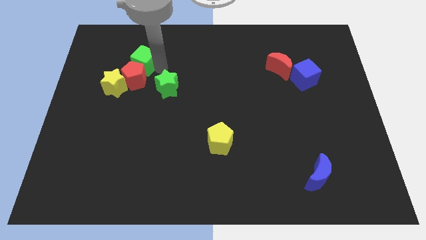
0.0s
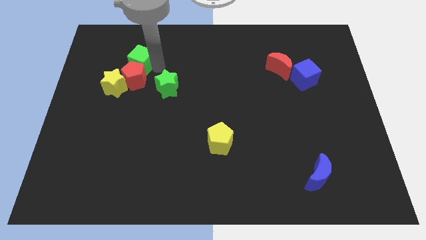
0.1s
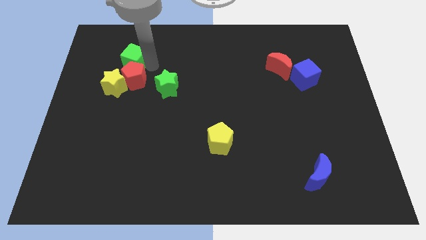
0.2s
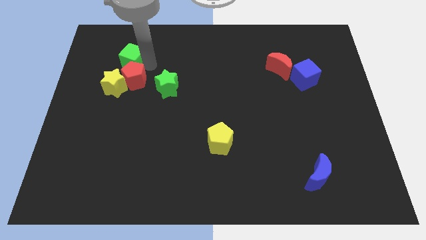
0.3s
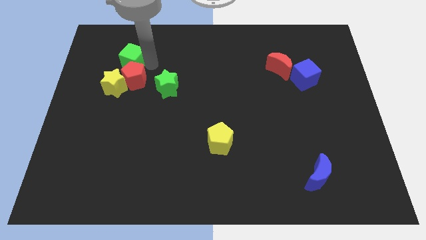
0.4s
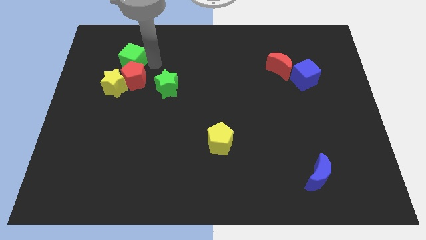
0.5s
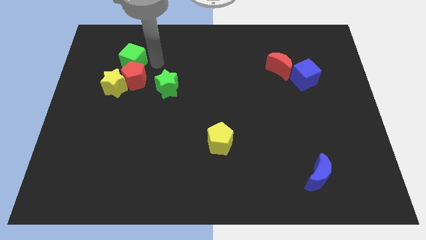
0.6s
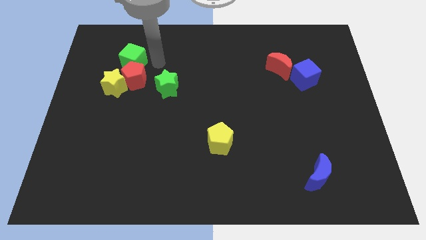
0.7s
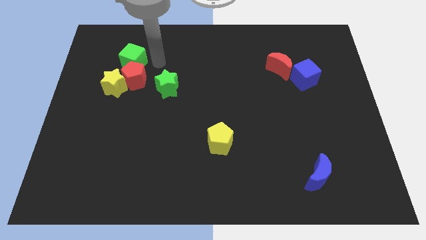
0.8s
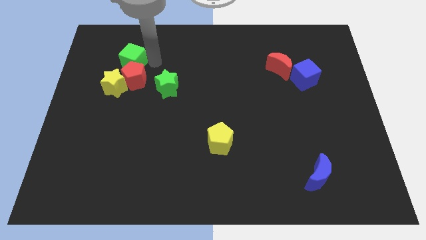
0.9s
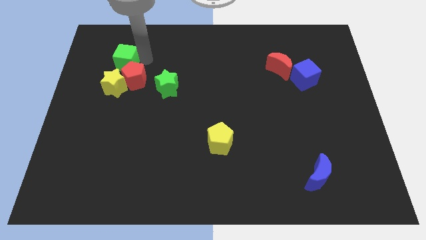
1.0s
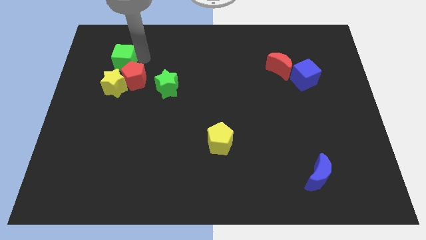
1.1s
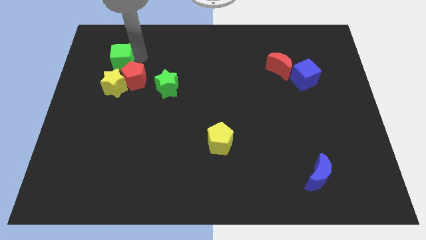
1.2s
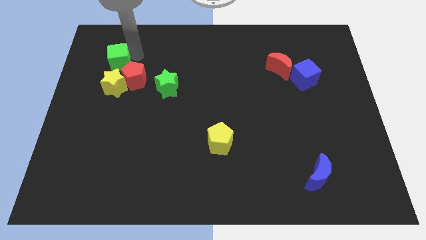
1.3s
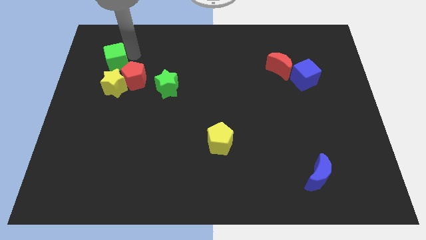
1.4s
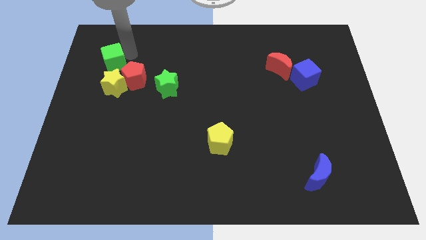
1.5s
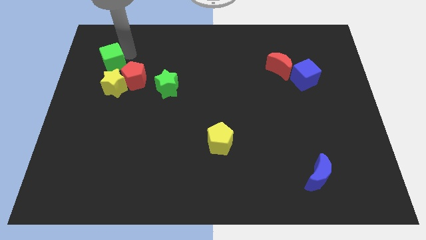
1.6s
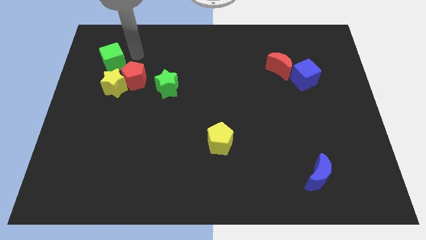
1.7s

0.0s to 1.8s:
move green cube slightly towards left

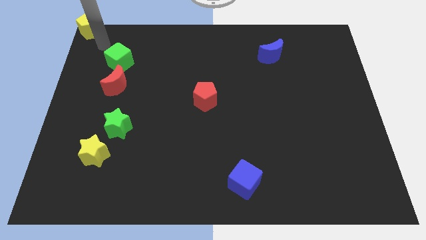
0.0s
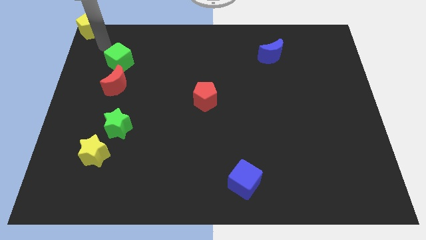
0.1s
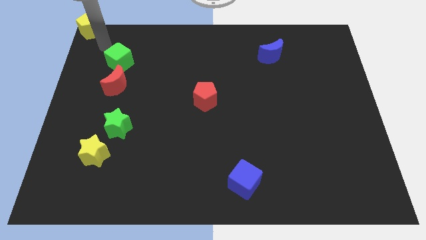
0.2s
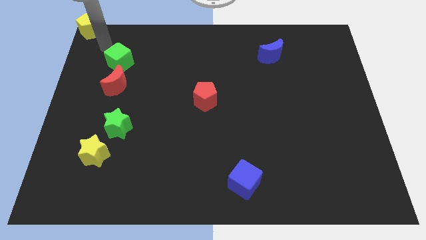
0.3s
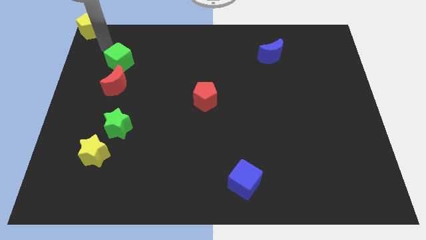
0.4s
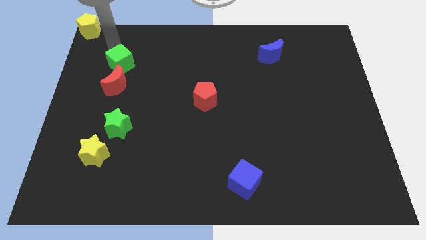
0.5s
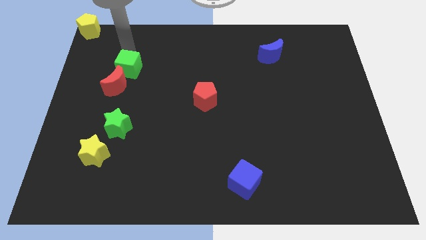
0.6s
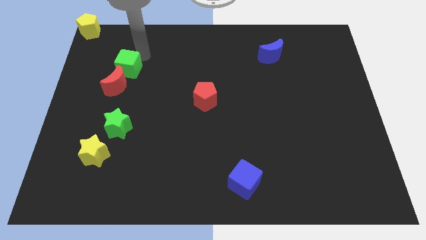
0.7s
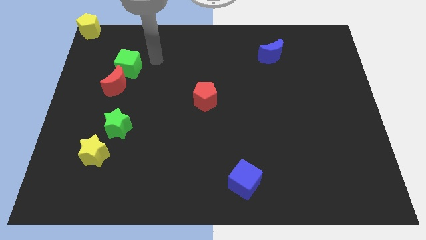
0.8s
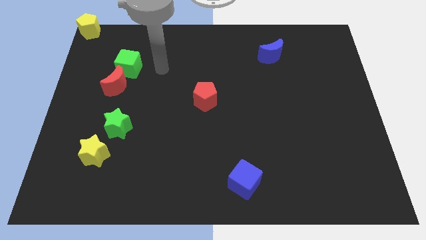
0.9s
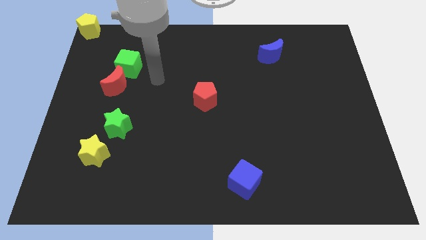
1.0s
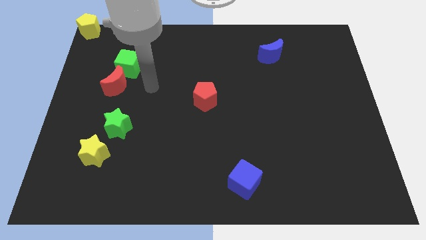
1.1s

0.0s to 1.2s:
make the green cube to touch the red crescent

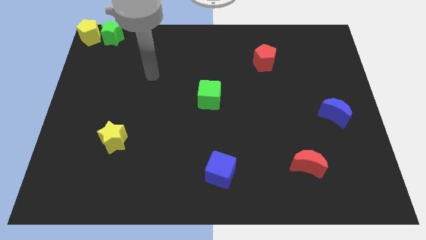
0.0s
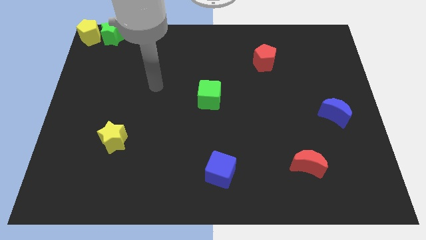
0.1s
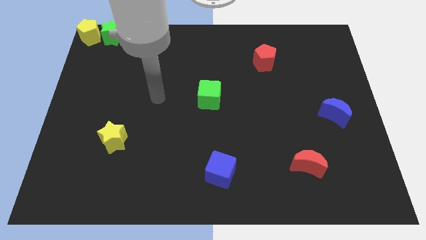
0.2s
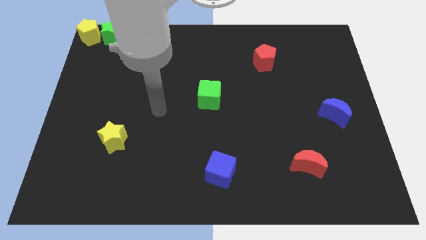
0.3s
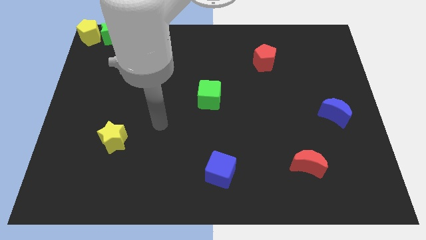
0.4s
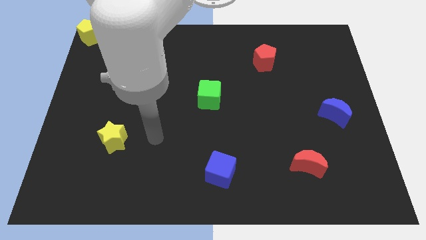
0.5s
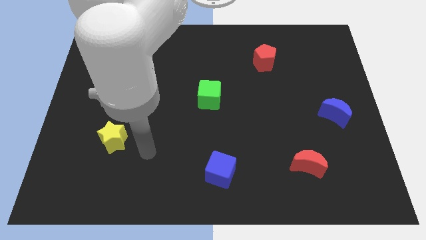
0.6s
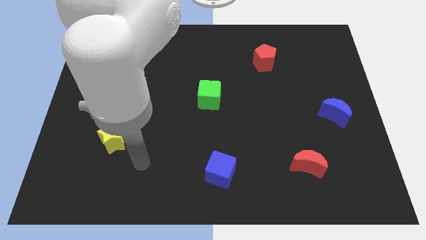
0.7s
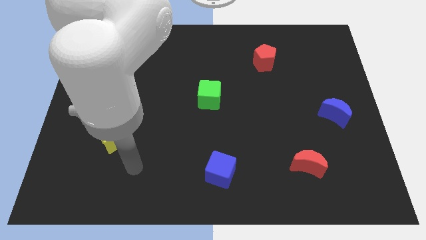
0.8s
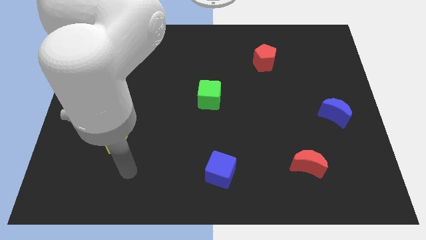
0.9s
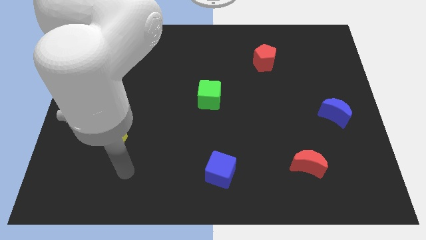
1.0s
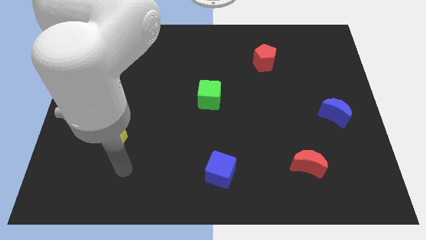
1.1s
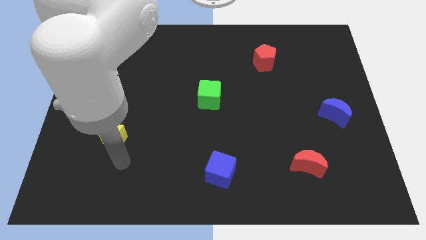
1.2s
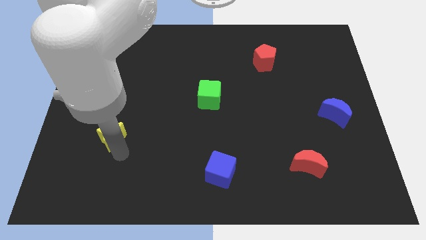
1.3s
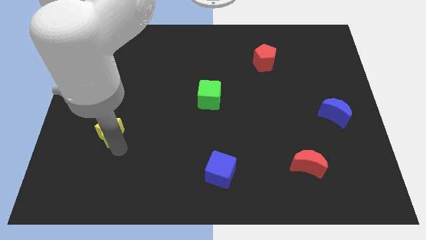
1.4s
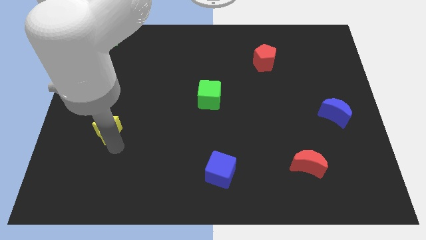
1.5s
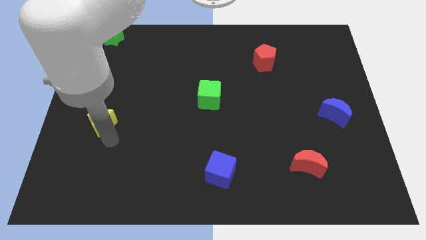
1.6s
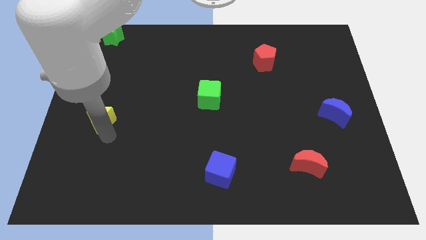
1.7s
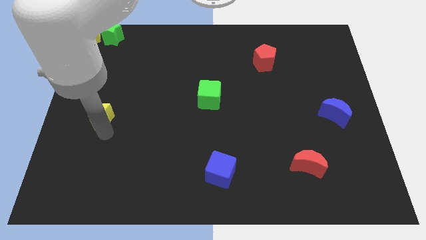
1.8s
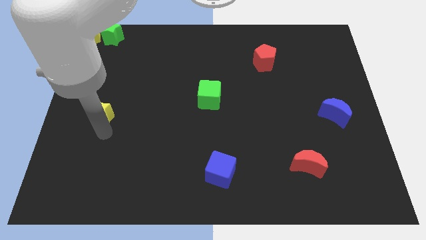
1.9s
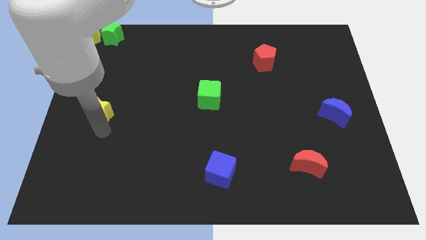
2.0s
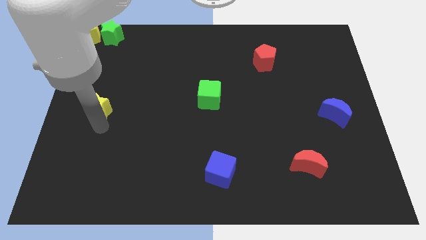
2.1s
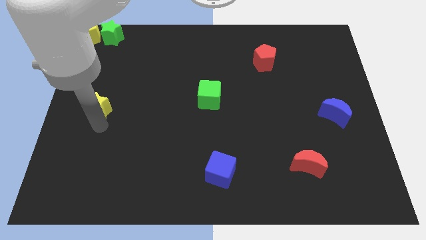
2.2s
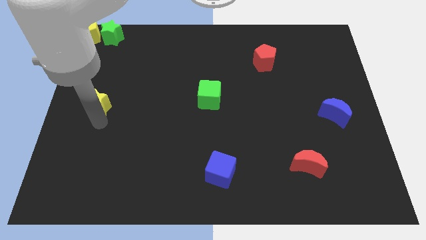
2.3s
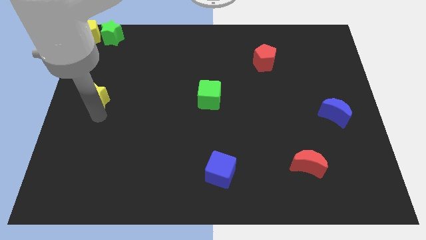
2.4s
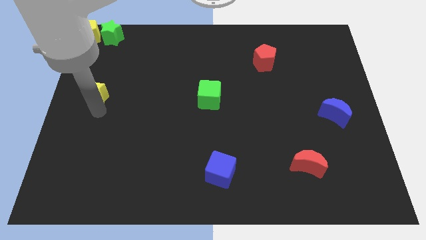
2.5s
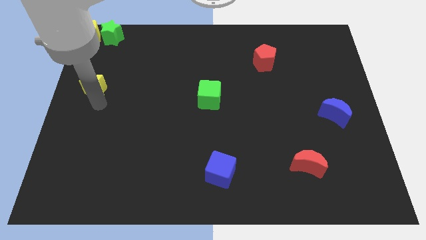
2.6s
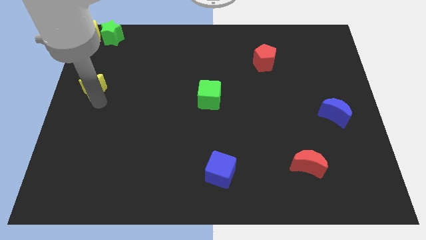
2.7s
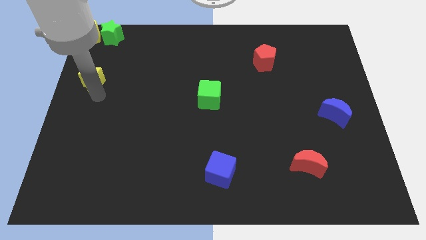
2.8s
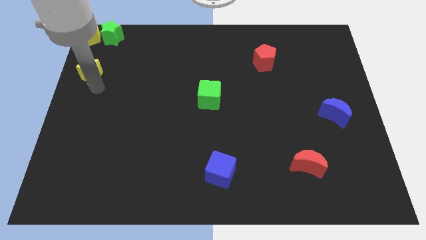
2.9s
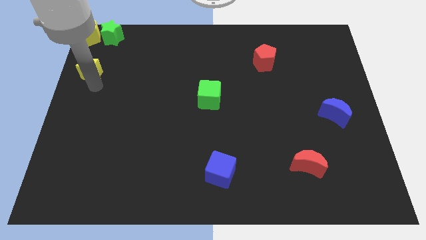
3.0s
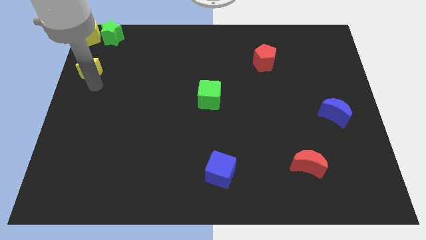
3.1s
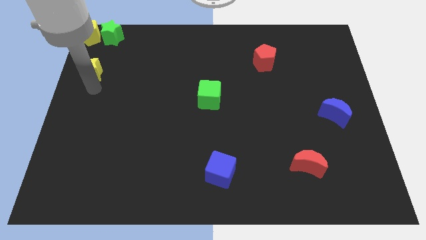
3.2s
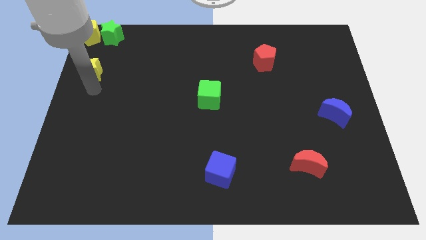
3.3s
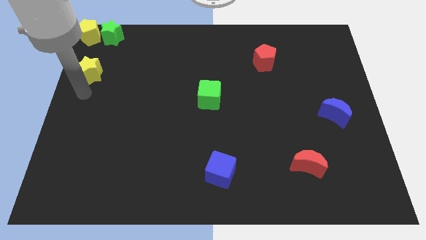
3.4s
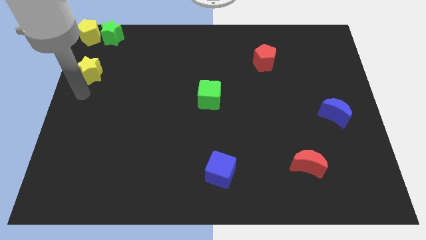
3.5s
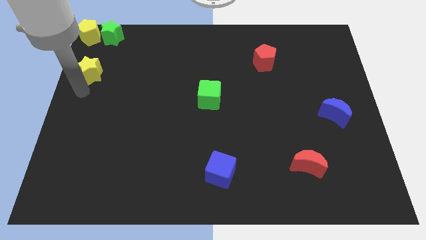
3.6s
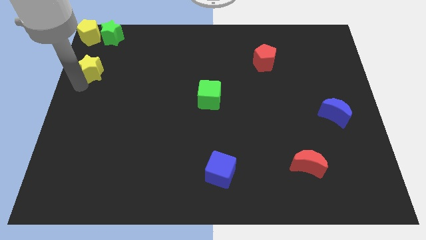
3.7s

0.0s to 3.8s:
push the yellow star towards the yellow pentagon

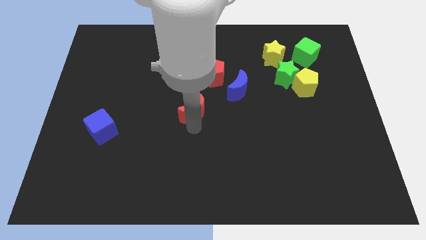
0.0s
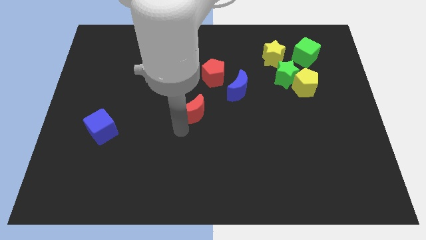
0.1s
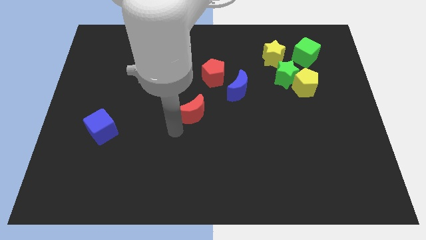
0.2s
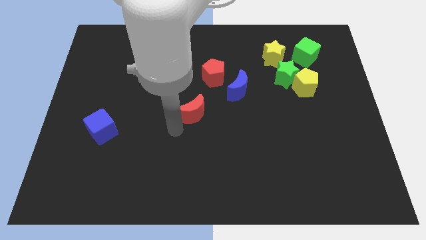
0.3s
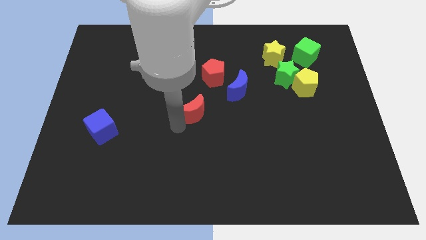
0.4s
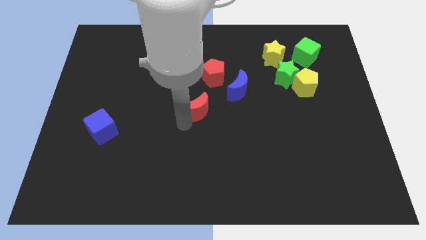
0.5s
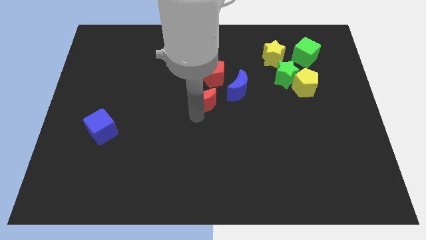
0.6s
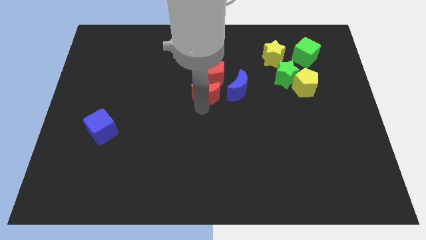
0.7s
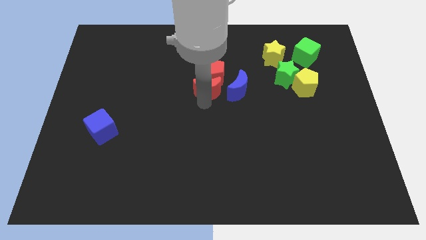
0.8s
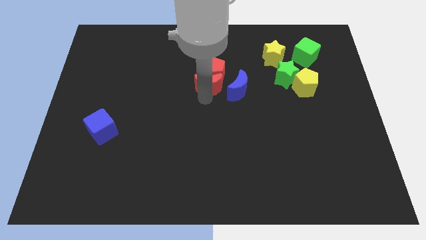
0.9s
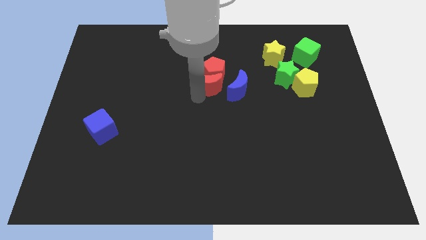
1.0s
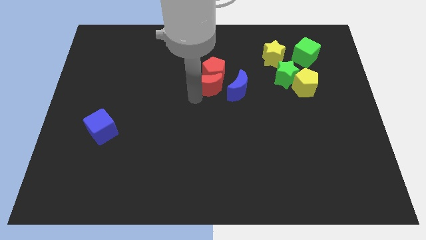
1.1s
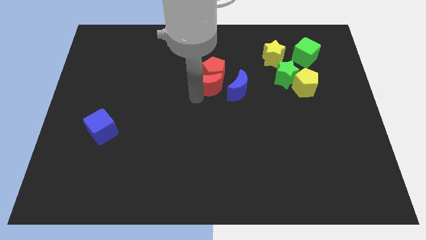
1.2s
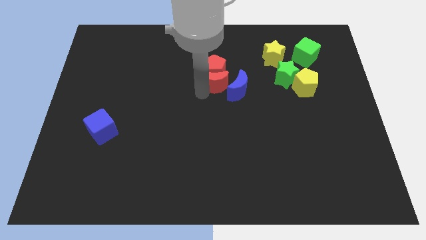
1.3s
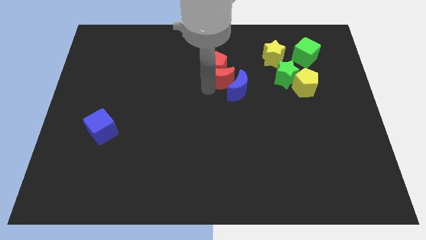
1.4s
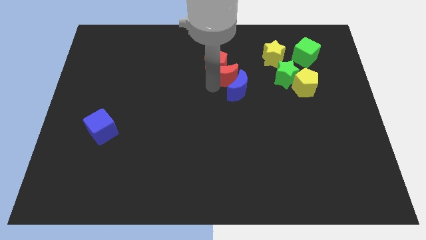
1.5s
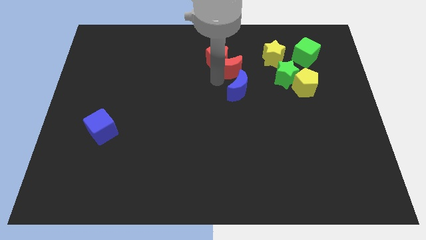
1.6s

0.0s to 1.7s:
place red crescent in between red pentagon and blue crescent

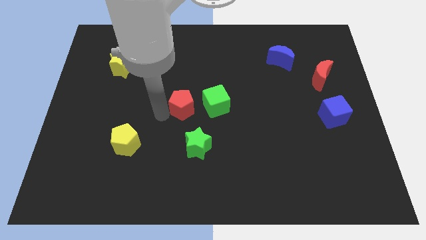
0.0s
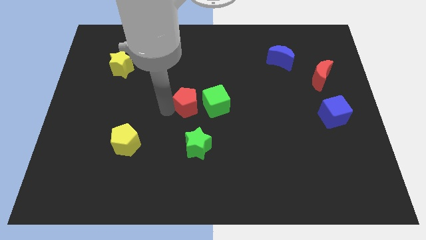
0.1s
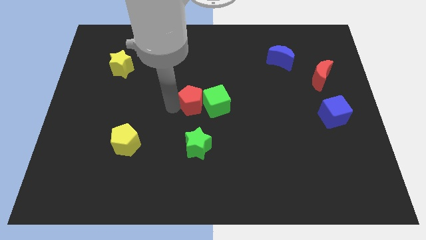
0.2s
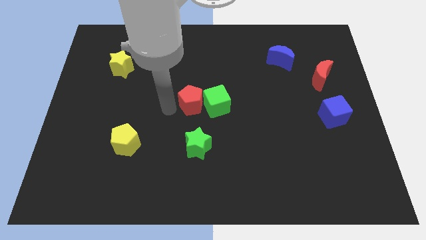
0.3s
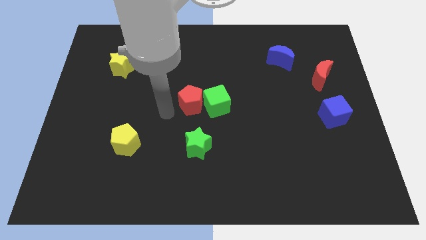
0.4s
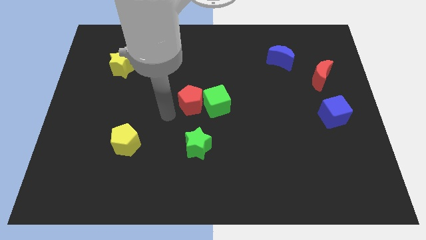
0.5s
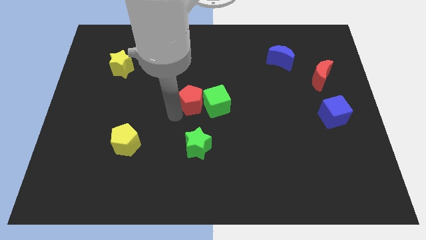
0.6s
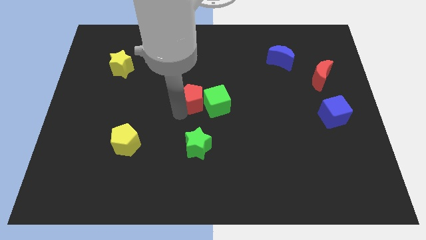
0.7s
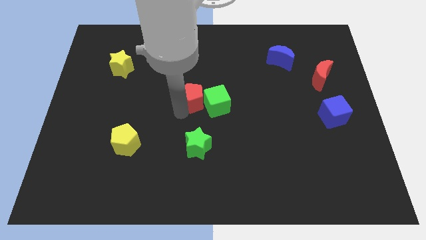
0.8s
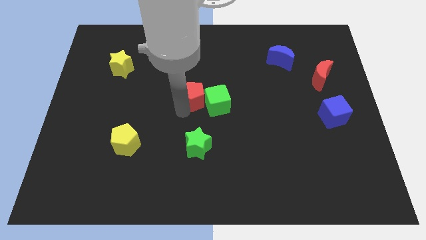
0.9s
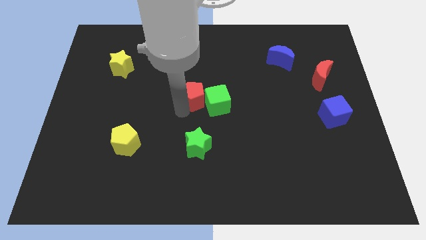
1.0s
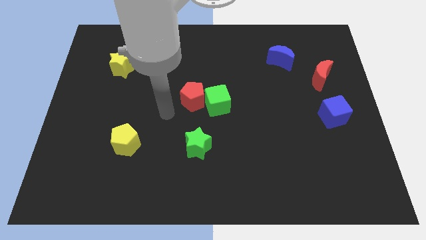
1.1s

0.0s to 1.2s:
push the red pentagon into the green cube
